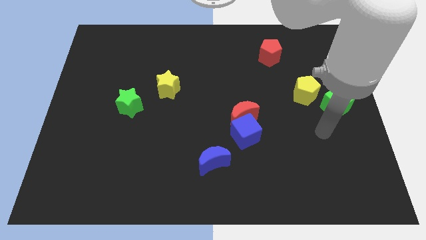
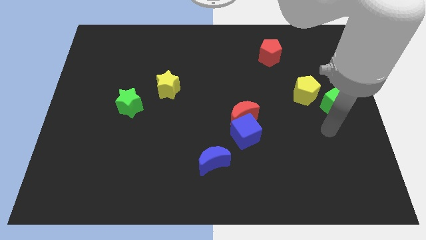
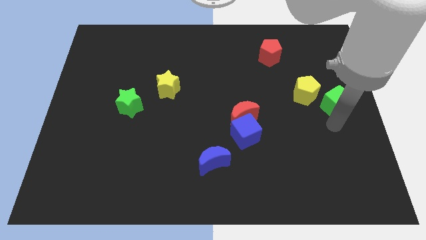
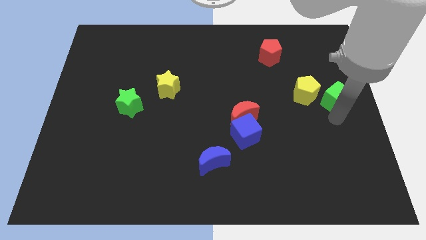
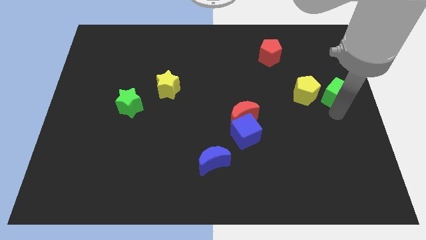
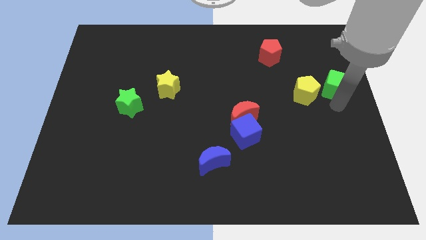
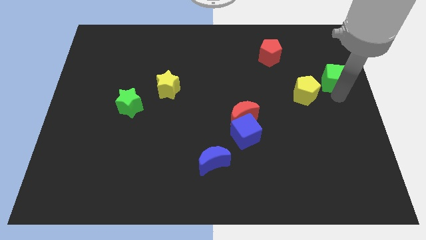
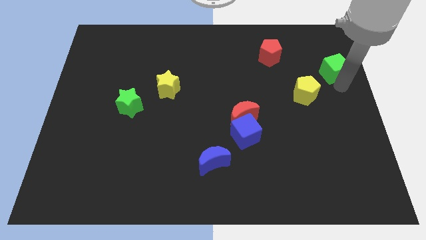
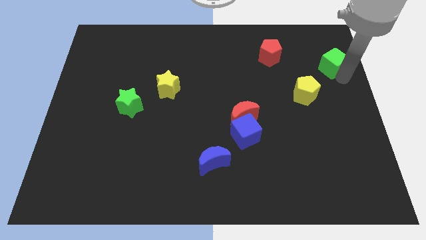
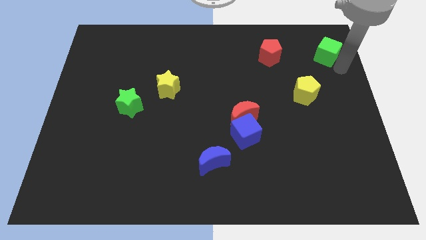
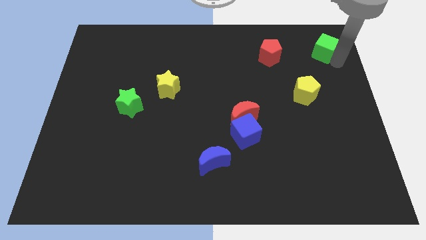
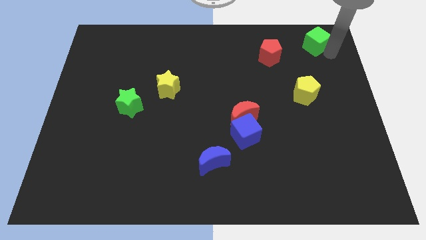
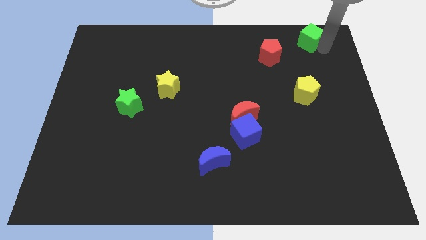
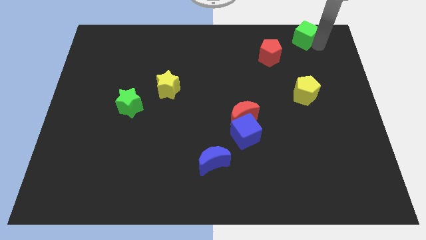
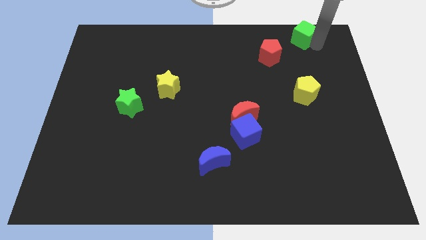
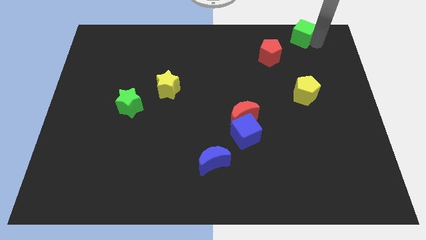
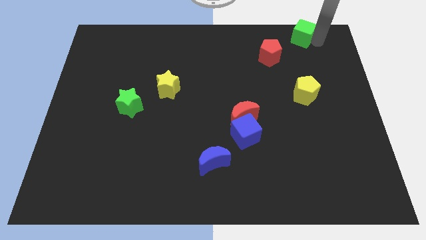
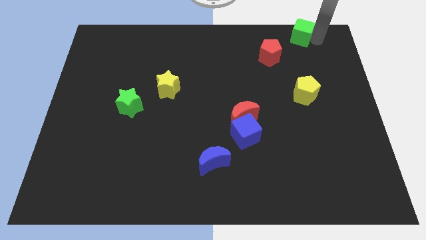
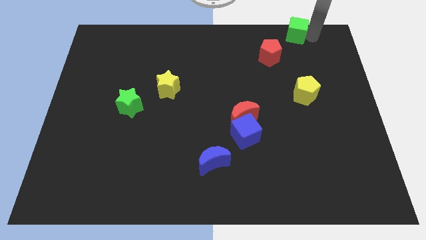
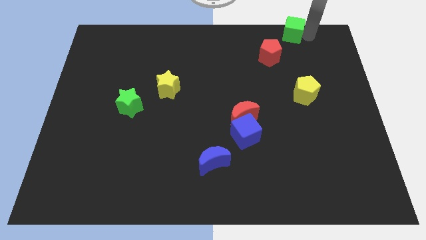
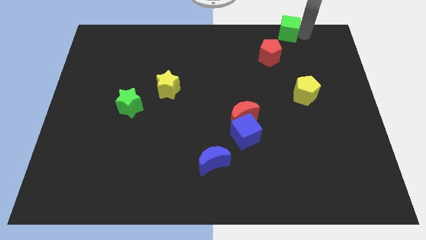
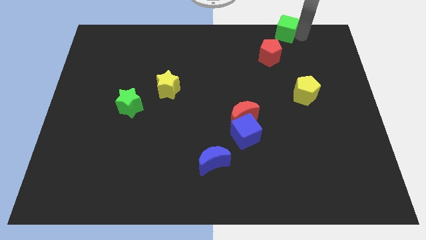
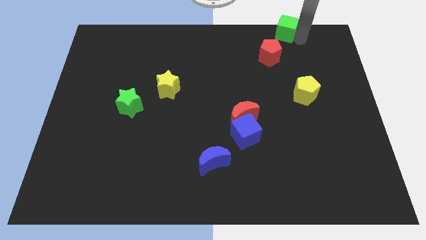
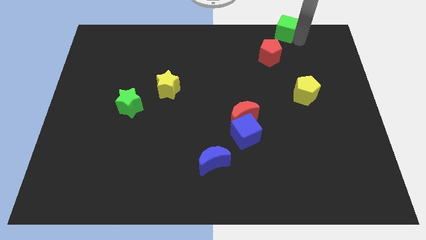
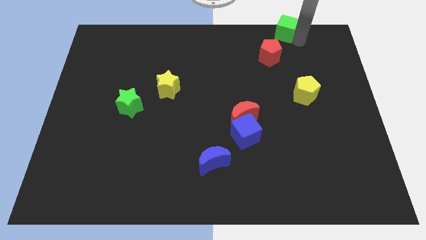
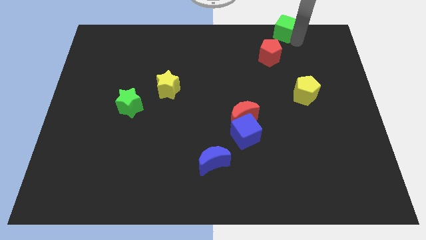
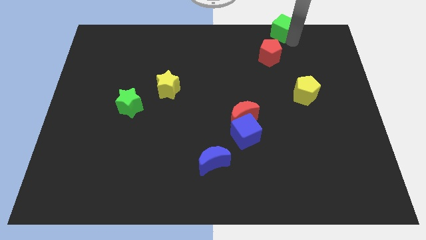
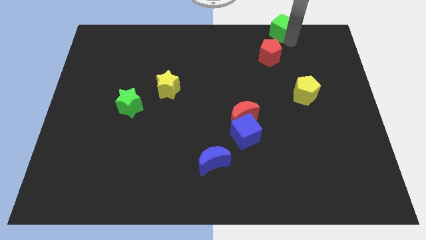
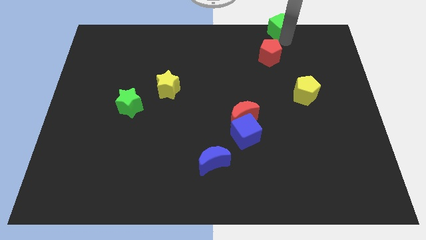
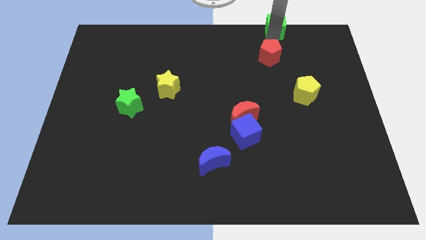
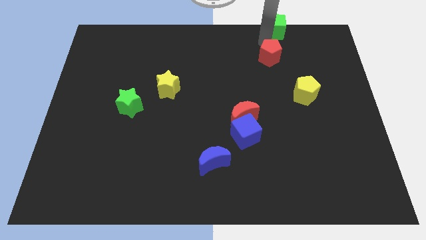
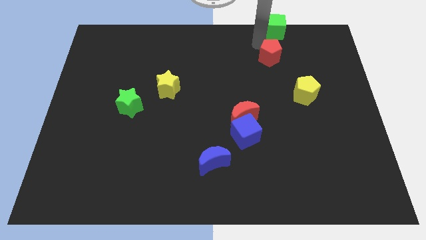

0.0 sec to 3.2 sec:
move the green cube above to the red pentagon

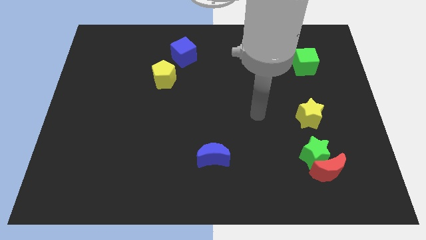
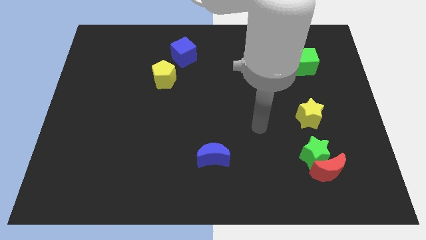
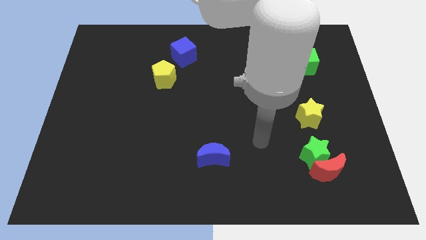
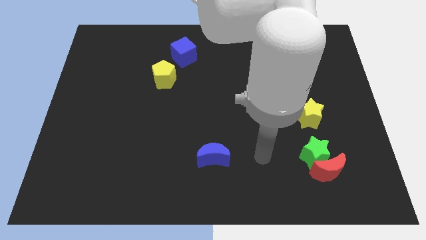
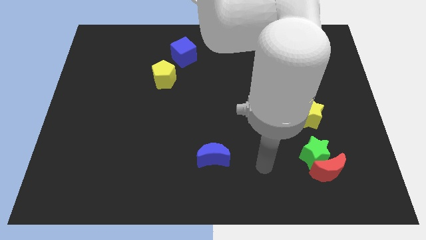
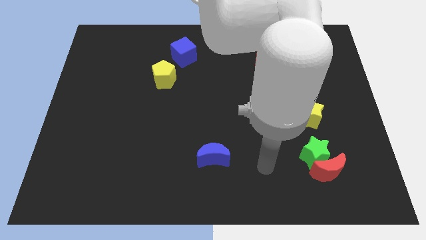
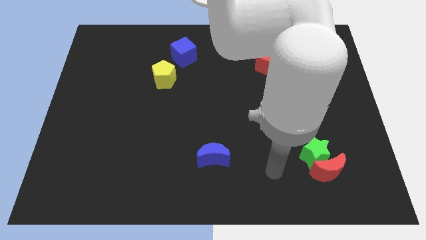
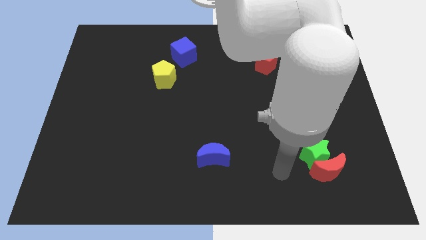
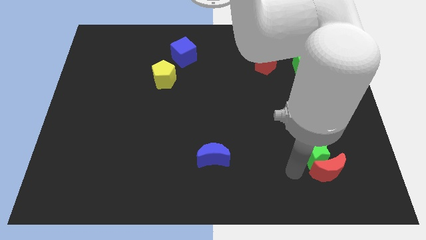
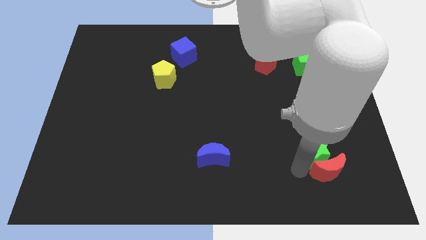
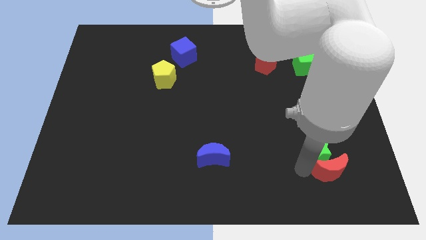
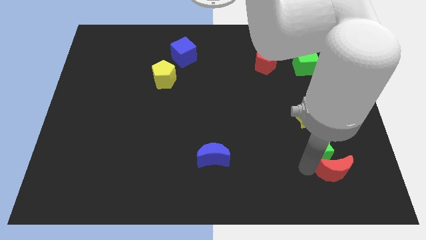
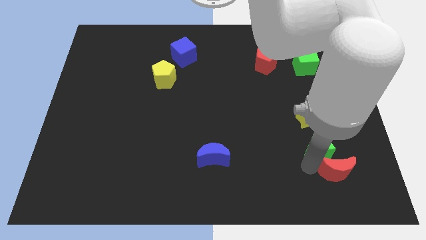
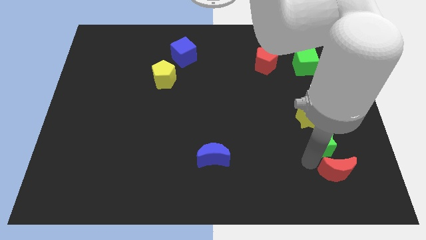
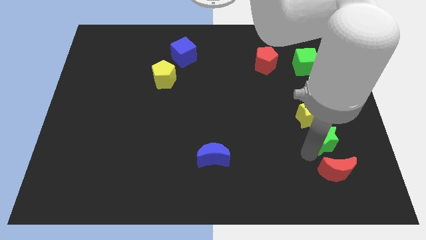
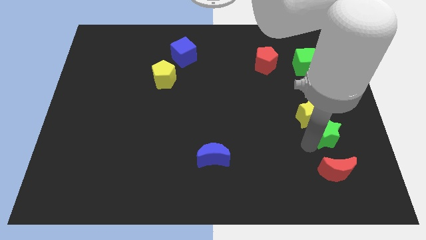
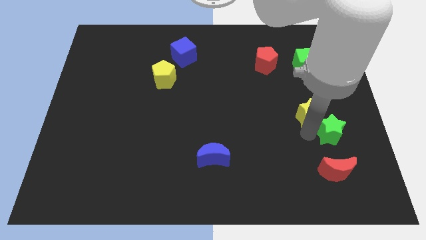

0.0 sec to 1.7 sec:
push the green star below the yellow star

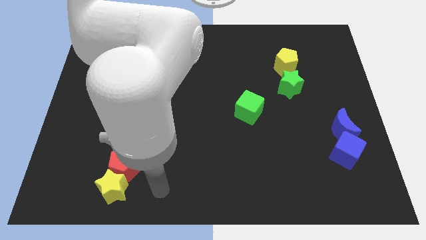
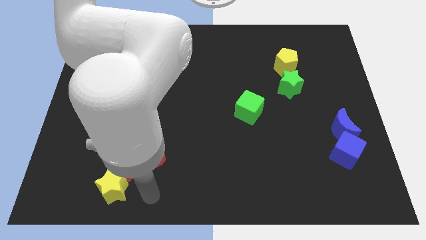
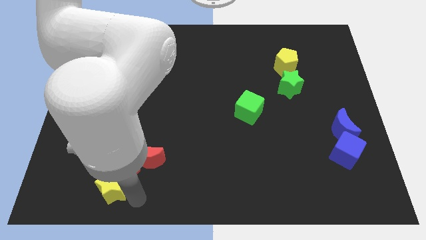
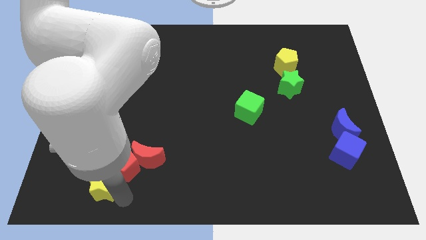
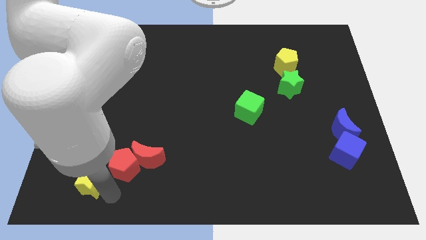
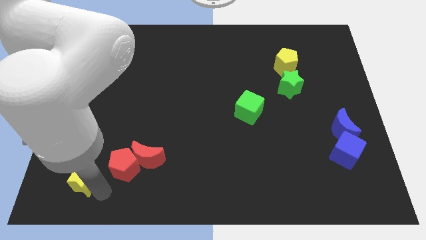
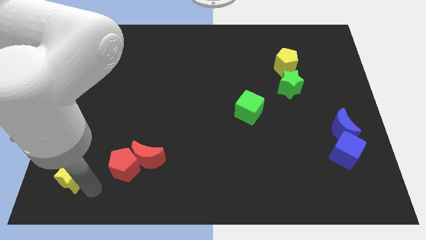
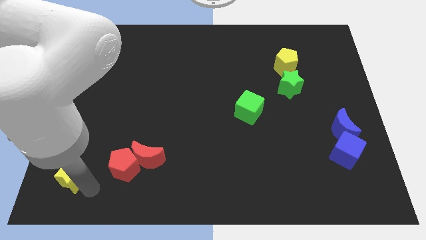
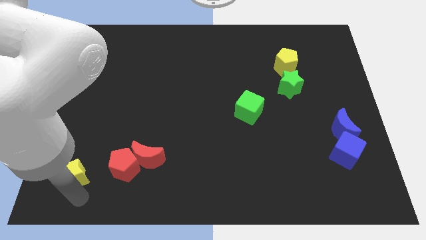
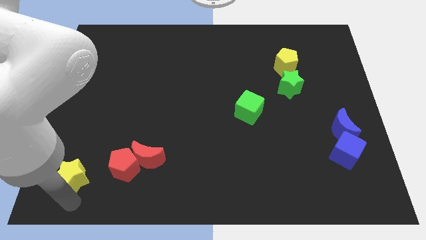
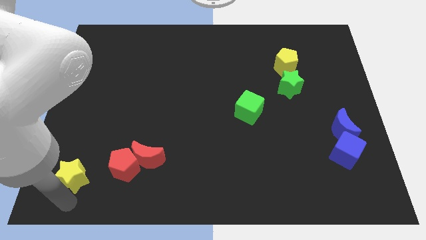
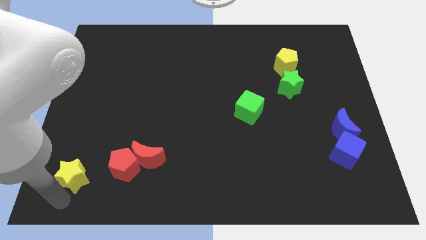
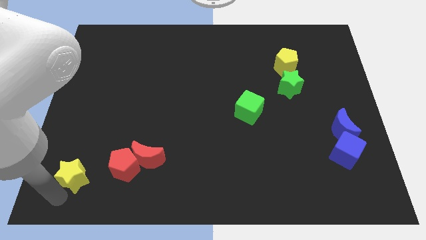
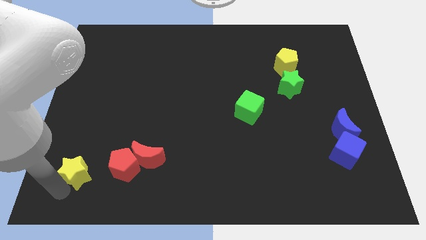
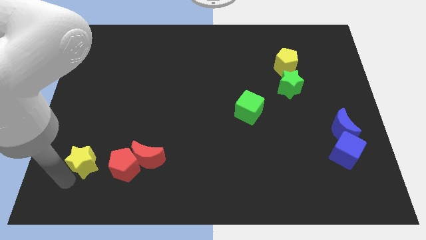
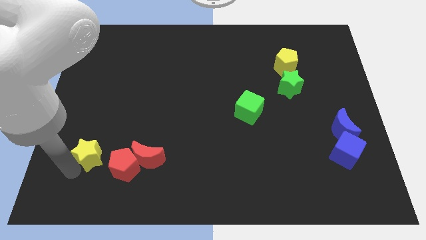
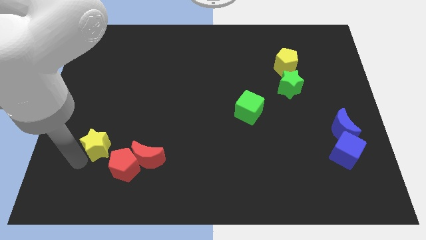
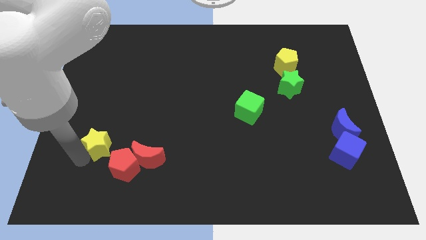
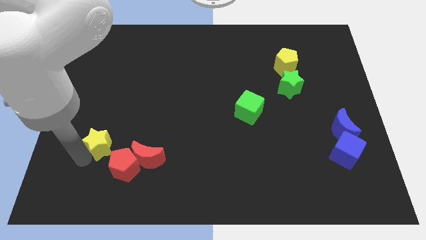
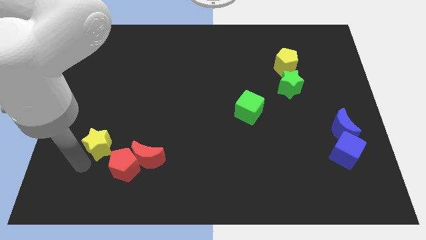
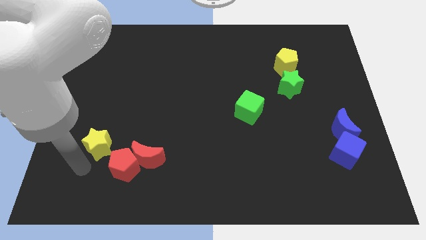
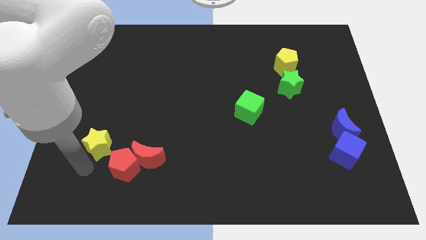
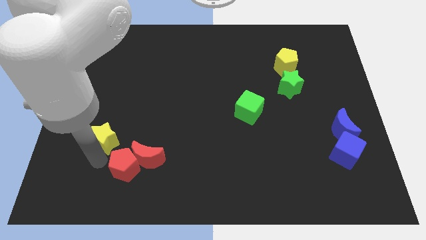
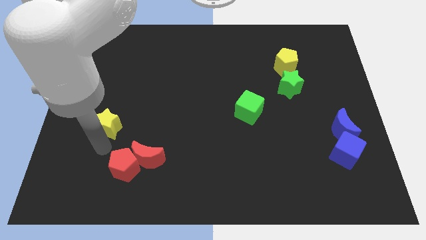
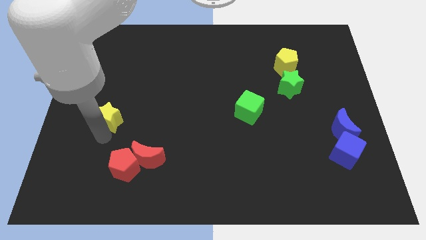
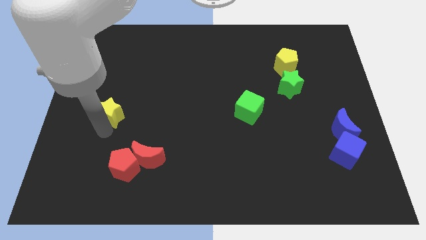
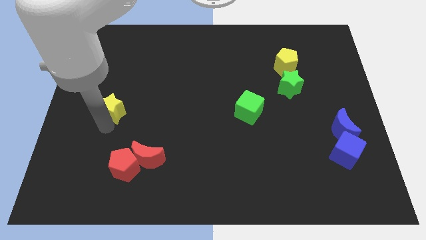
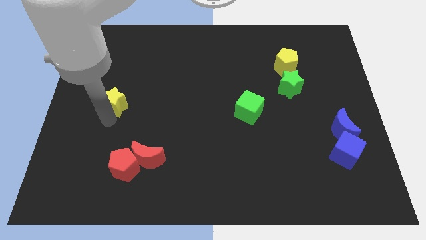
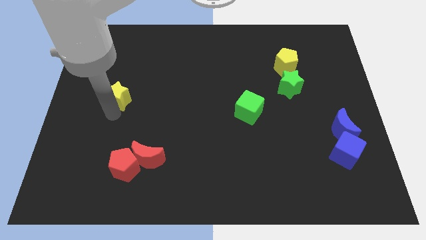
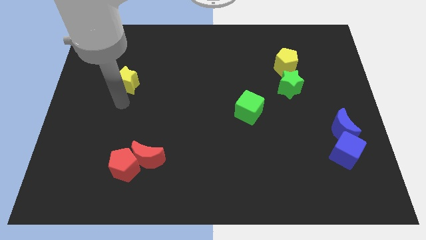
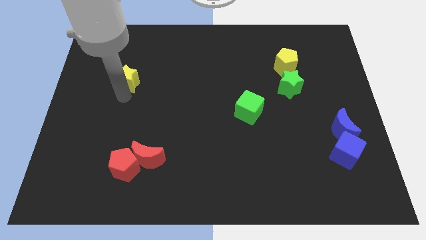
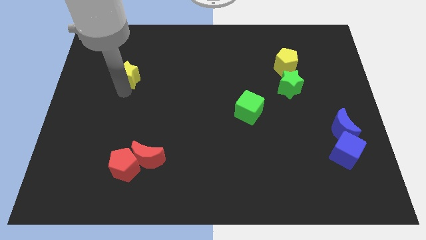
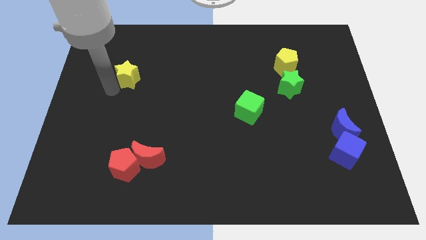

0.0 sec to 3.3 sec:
separate yellow star from the red pentagon

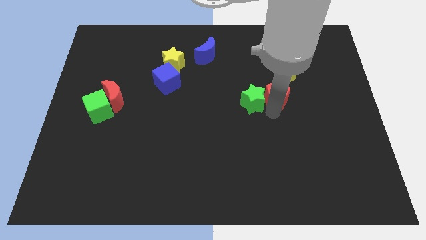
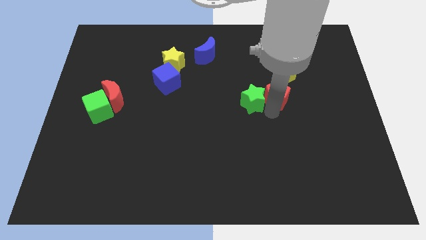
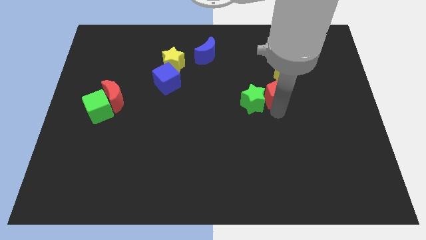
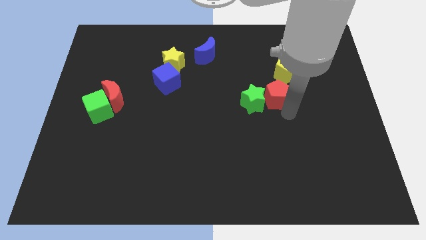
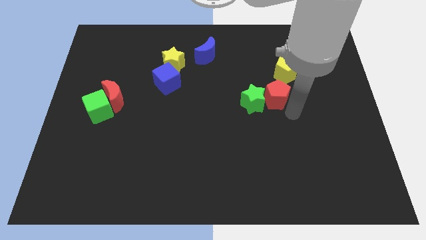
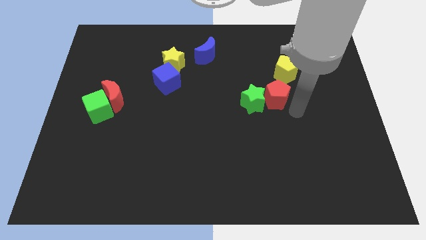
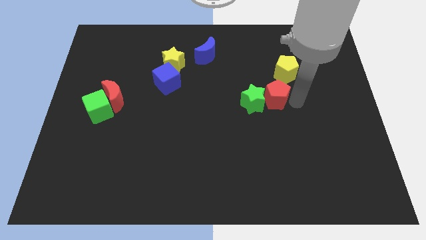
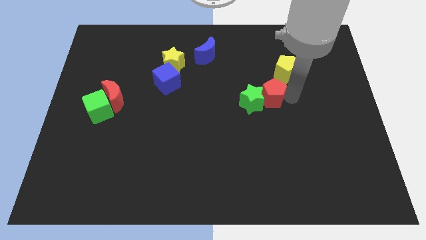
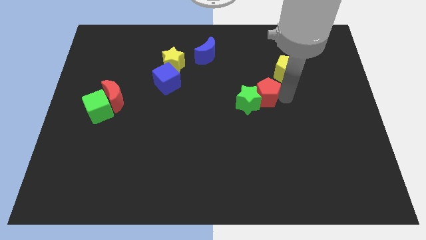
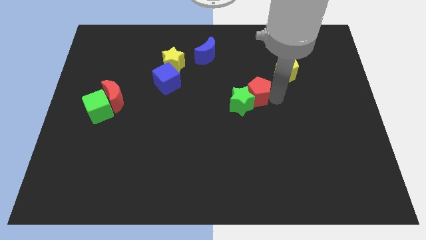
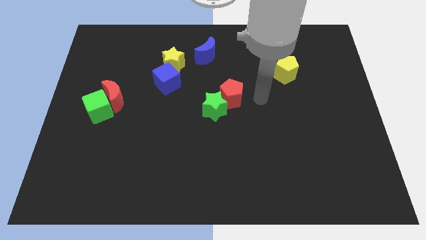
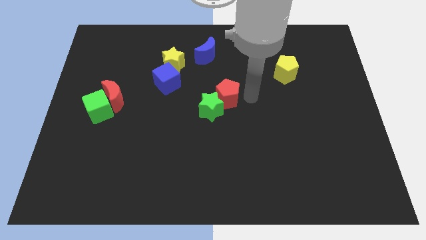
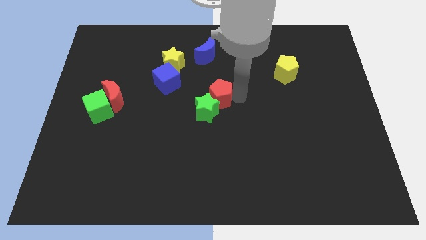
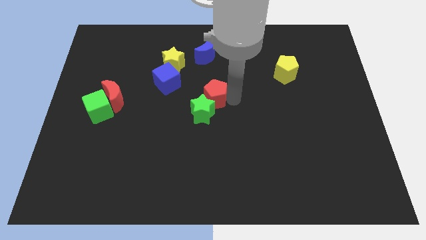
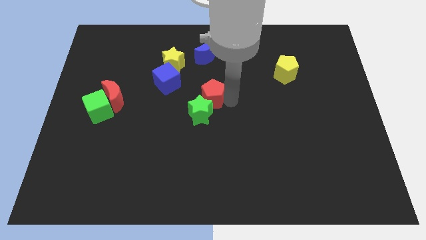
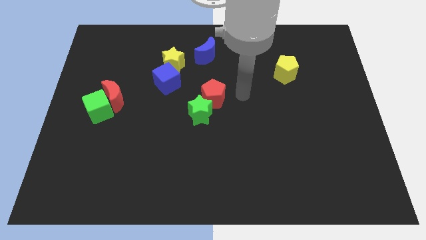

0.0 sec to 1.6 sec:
move red pentagon to the bottom of blue moon
